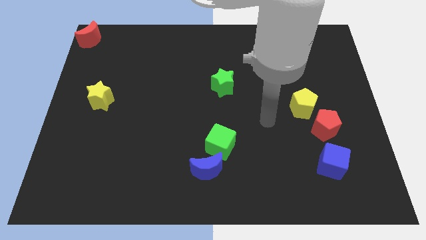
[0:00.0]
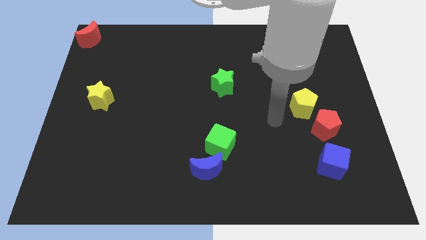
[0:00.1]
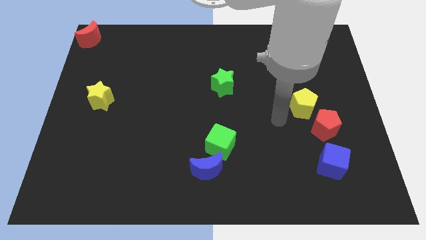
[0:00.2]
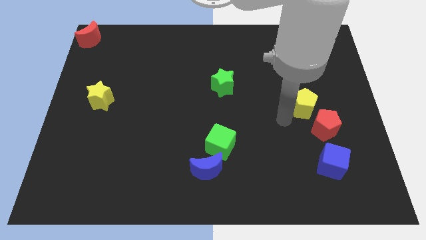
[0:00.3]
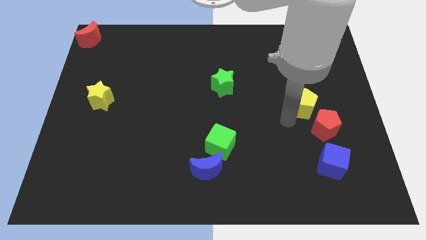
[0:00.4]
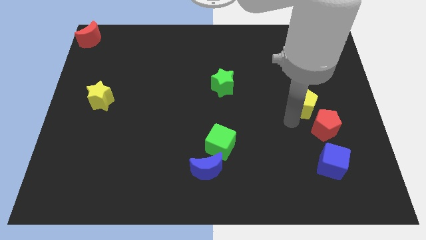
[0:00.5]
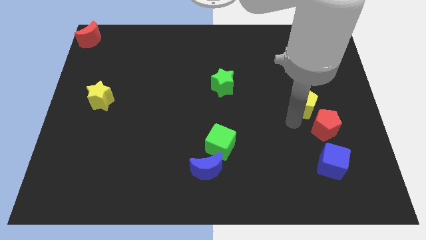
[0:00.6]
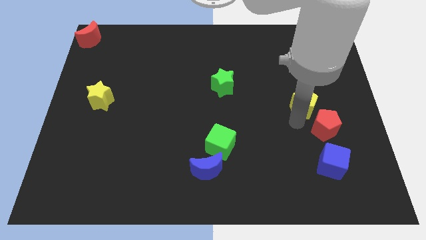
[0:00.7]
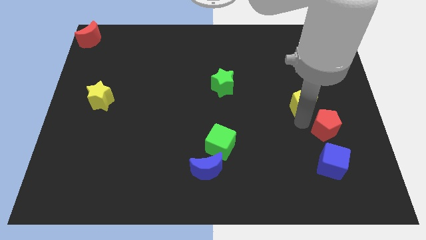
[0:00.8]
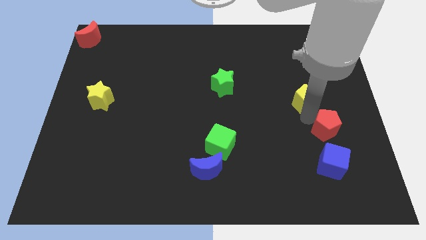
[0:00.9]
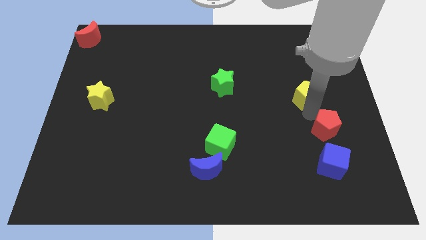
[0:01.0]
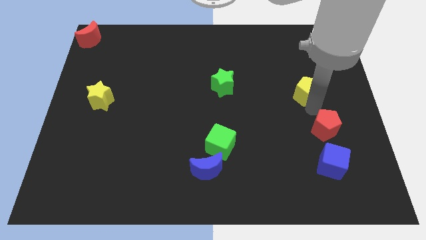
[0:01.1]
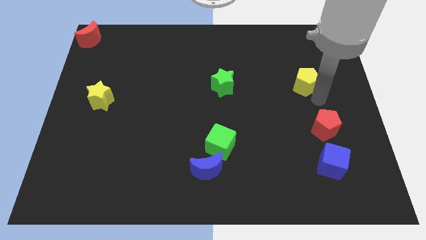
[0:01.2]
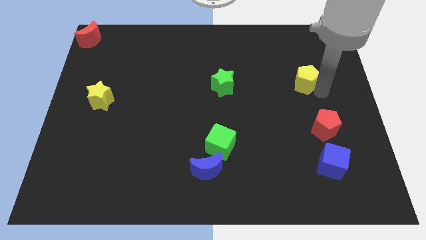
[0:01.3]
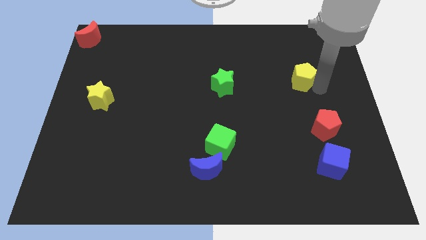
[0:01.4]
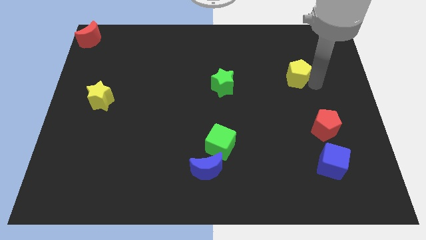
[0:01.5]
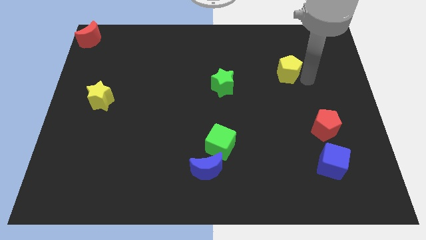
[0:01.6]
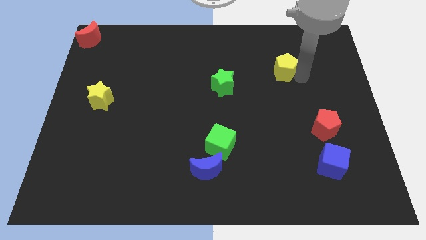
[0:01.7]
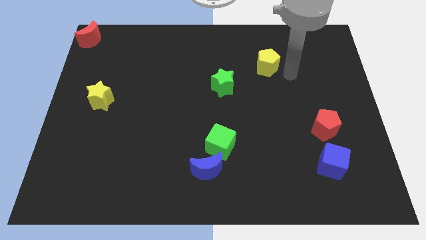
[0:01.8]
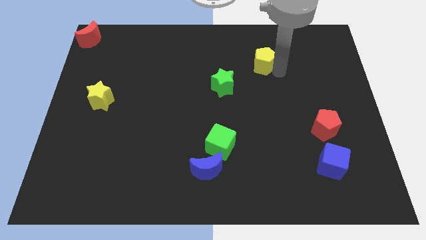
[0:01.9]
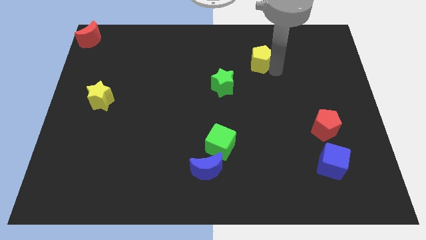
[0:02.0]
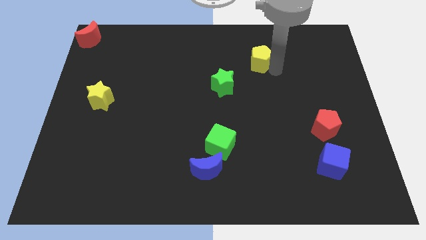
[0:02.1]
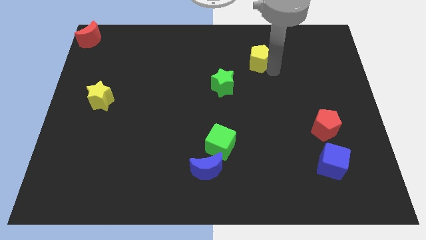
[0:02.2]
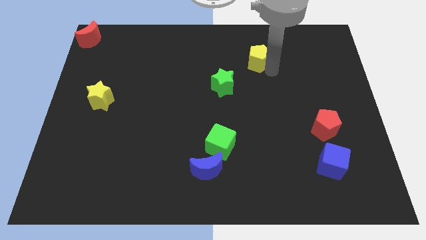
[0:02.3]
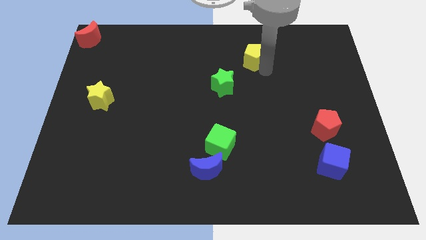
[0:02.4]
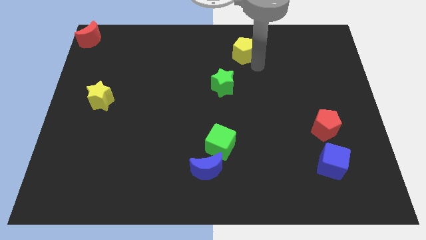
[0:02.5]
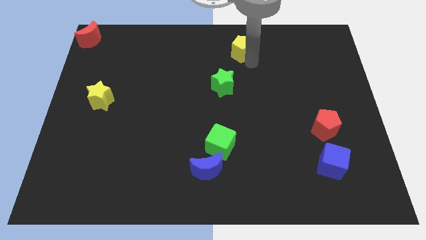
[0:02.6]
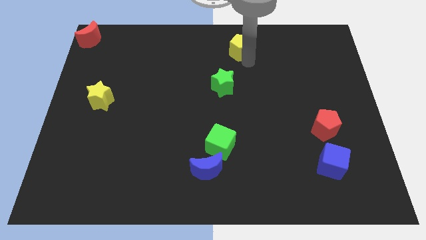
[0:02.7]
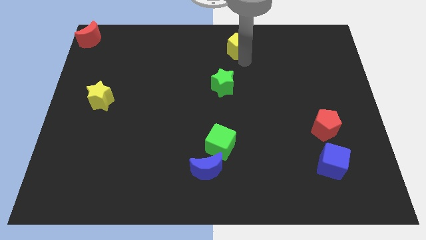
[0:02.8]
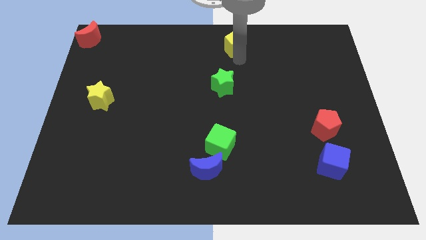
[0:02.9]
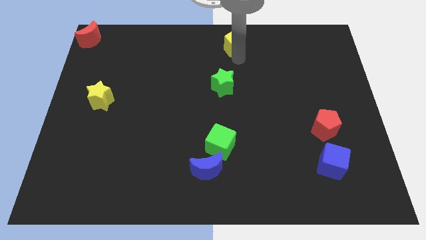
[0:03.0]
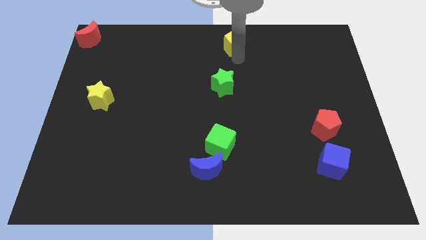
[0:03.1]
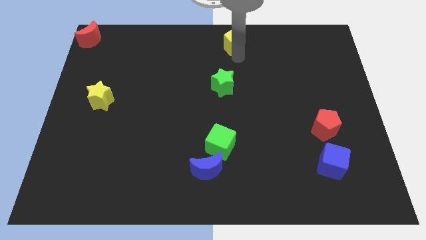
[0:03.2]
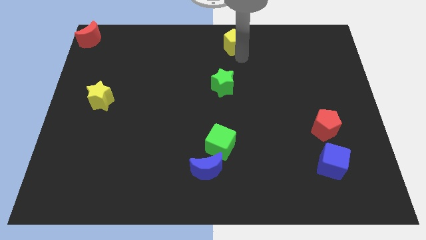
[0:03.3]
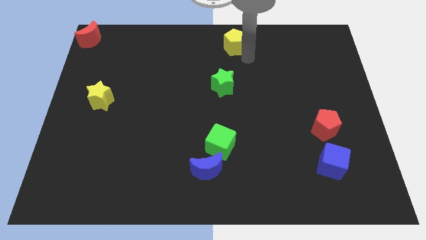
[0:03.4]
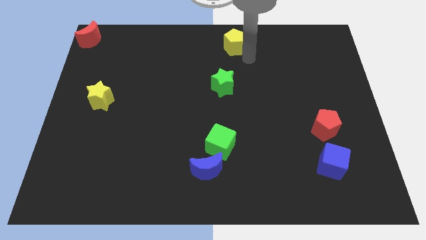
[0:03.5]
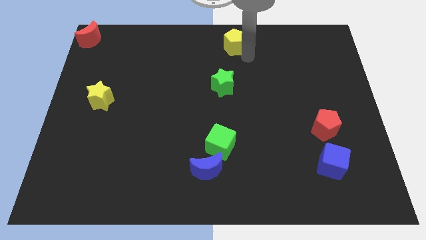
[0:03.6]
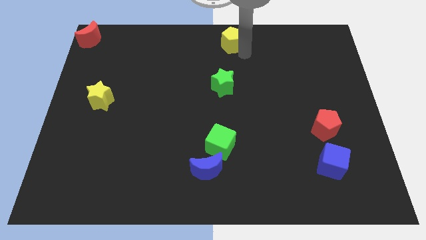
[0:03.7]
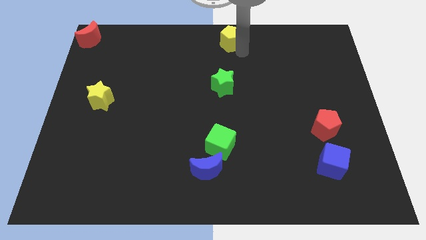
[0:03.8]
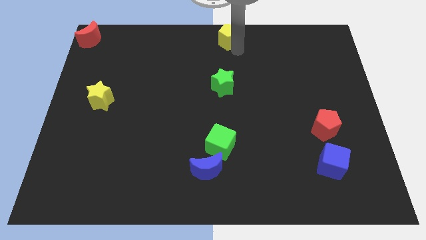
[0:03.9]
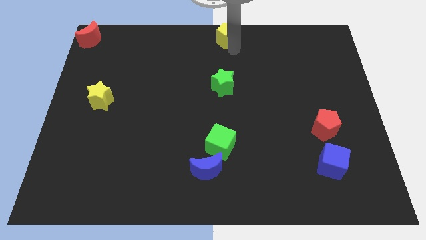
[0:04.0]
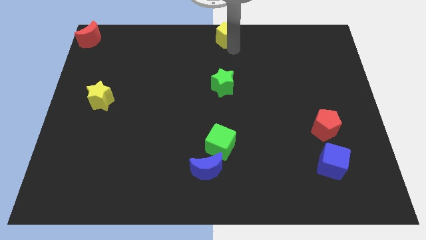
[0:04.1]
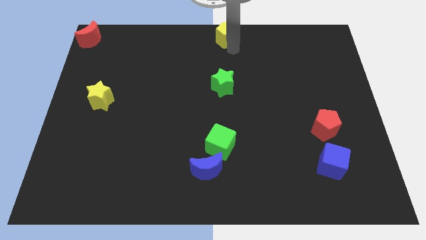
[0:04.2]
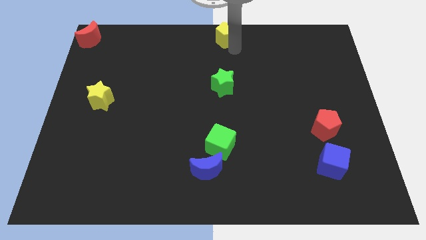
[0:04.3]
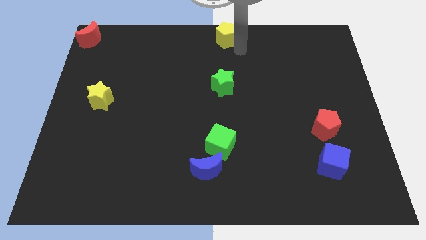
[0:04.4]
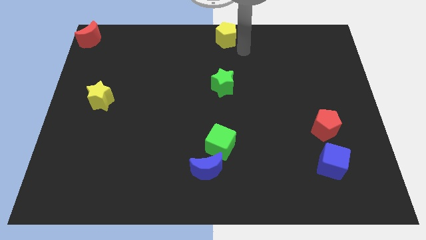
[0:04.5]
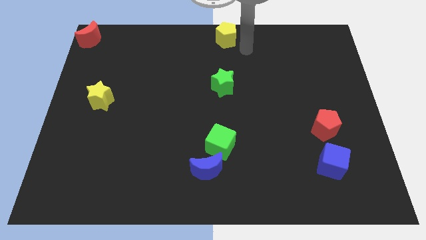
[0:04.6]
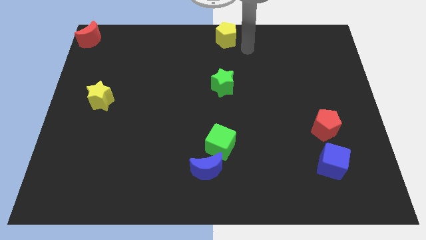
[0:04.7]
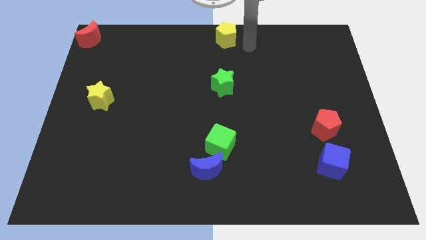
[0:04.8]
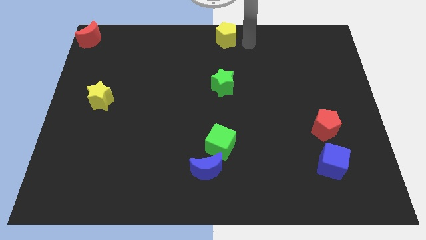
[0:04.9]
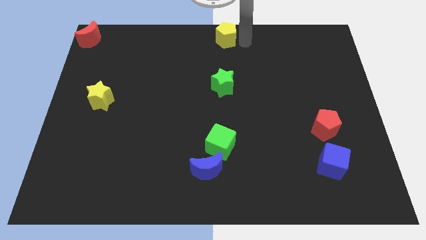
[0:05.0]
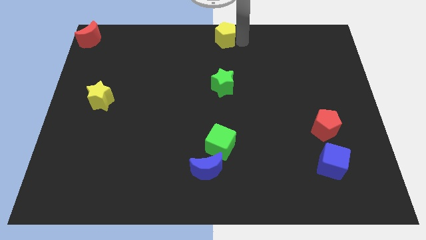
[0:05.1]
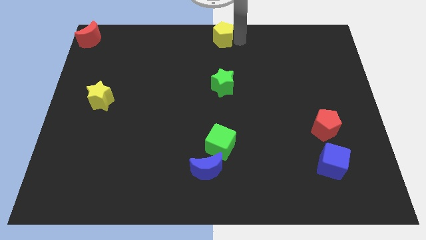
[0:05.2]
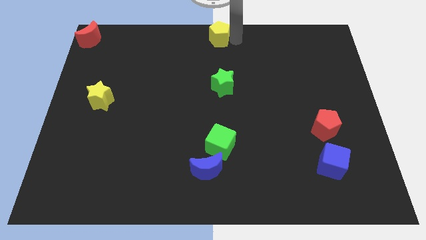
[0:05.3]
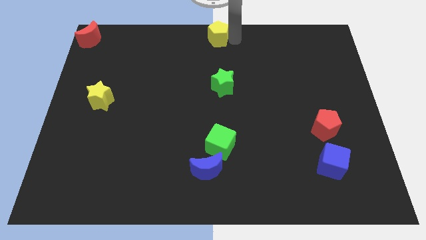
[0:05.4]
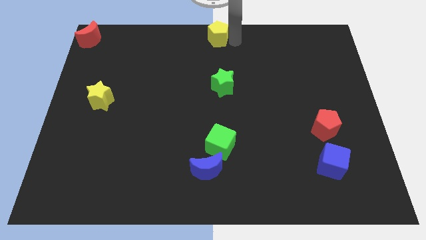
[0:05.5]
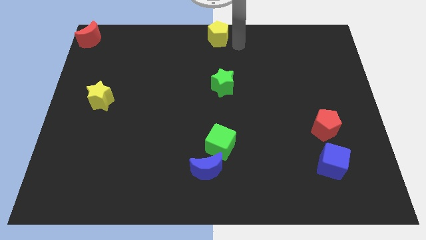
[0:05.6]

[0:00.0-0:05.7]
put the yellow pentagon at the top center of the board

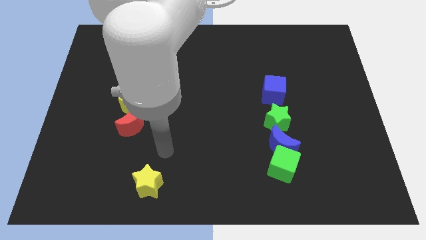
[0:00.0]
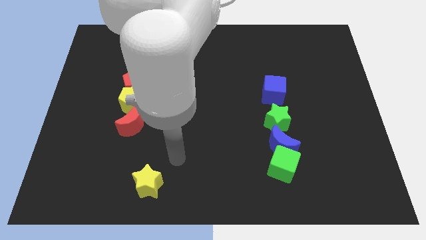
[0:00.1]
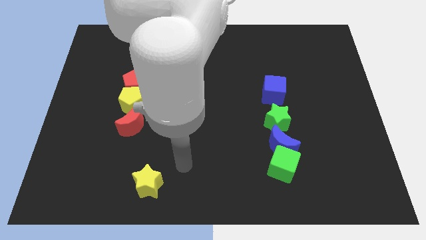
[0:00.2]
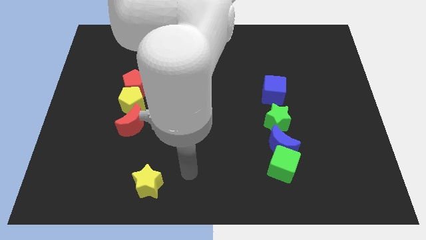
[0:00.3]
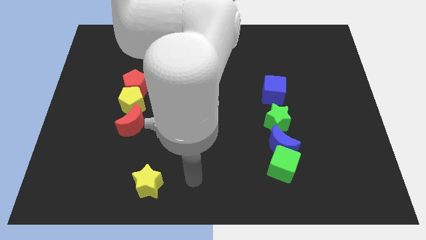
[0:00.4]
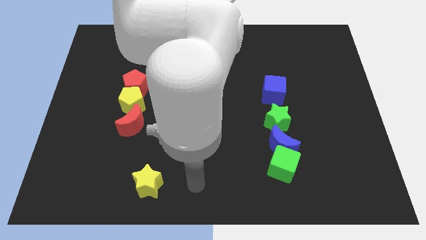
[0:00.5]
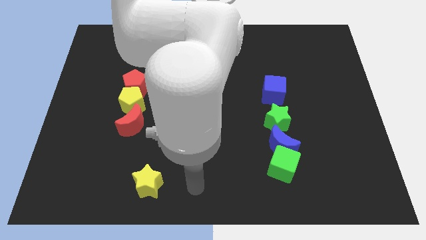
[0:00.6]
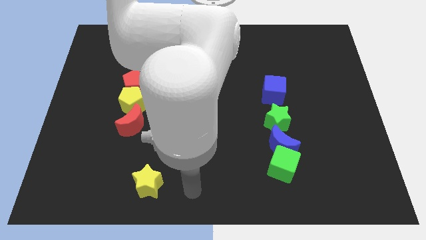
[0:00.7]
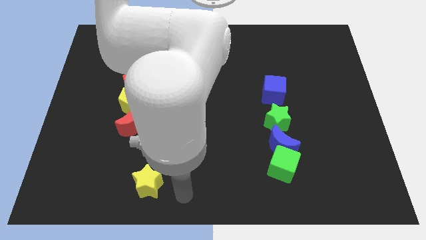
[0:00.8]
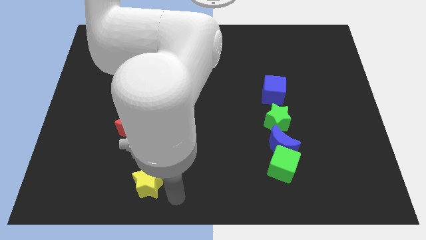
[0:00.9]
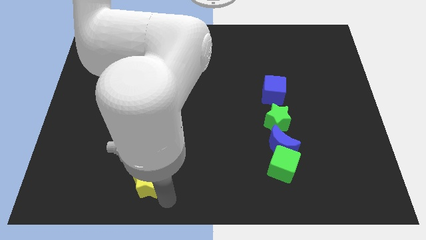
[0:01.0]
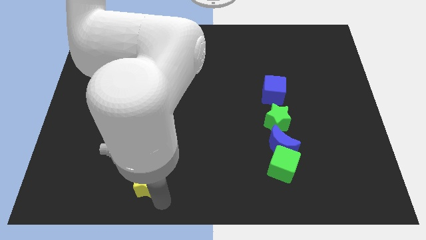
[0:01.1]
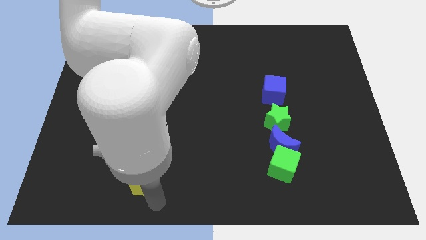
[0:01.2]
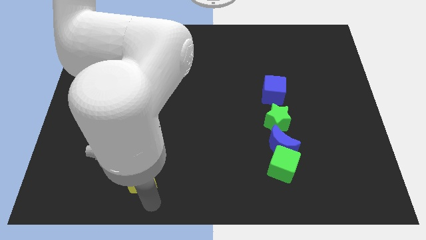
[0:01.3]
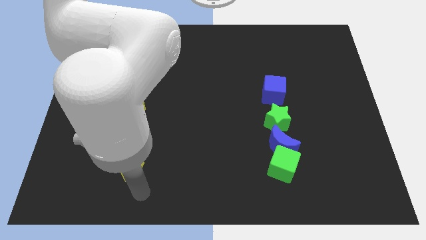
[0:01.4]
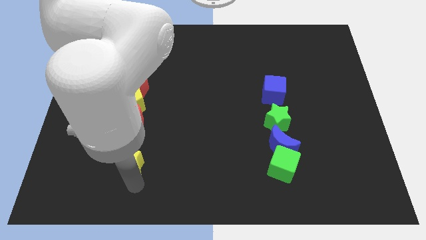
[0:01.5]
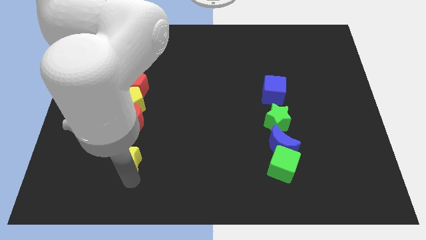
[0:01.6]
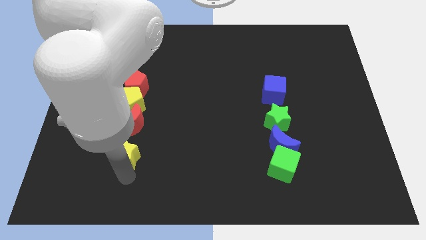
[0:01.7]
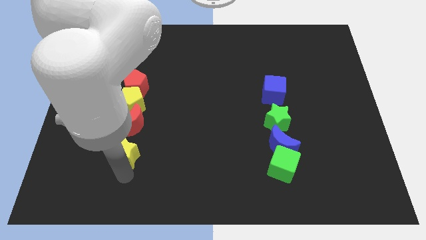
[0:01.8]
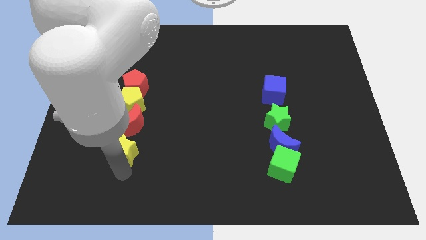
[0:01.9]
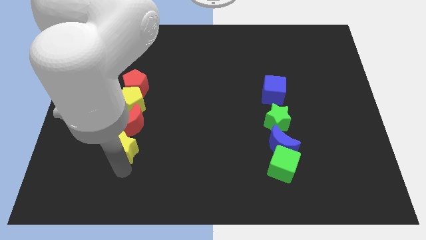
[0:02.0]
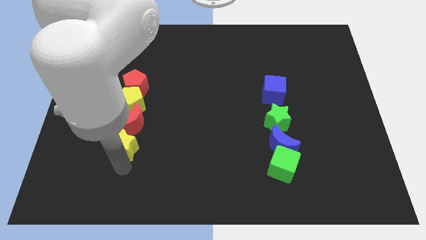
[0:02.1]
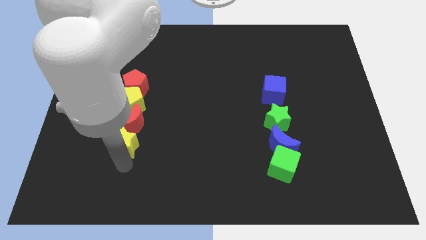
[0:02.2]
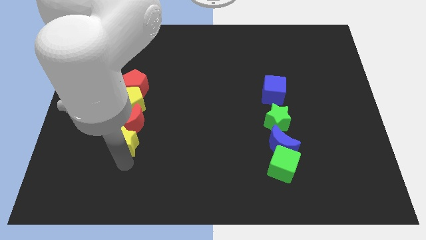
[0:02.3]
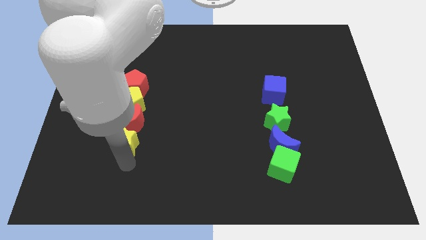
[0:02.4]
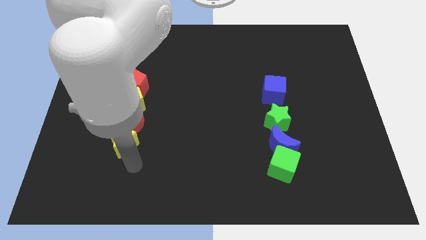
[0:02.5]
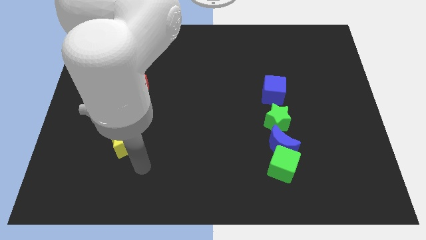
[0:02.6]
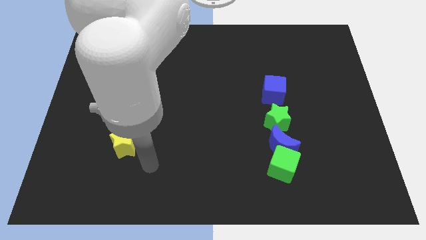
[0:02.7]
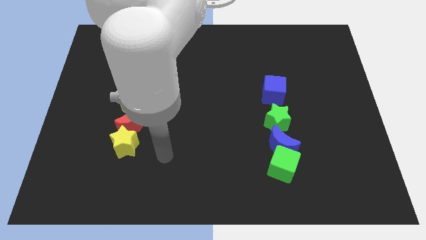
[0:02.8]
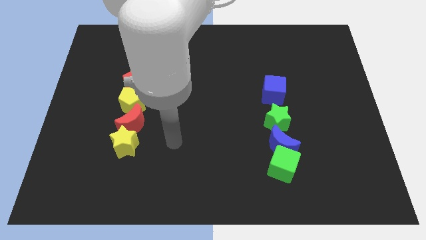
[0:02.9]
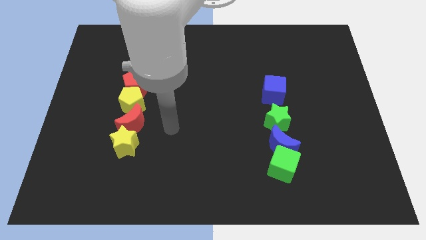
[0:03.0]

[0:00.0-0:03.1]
push yellow star into the red crescent
